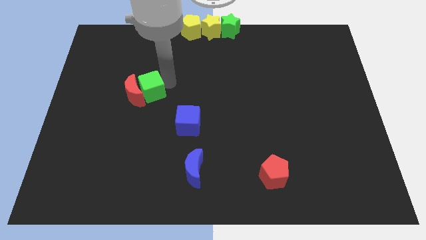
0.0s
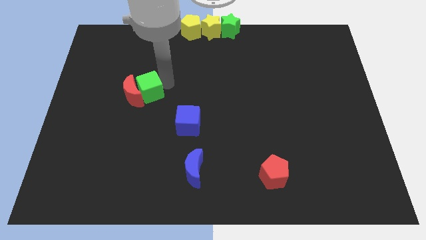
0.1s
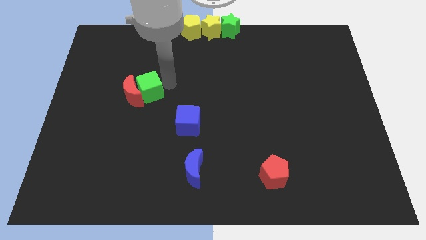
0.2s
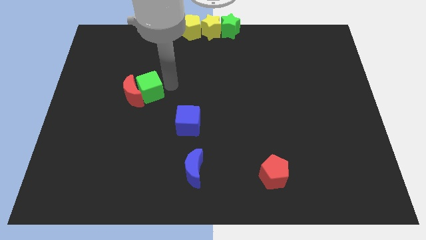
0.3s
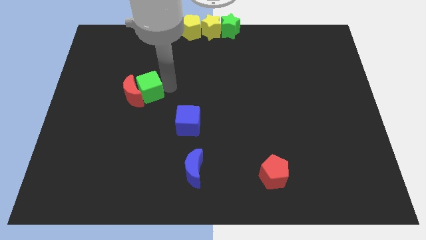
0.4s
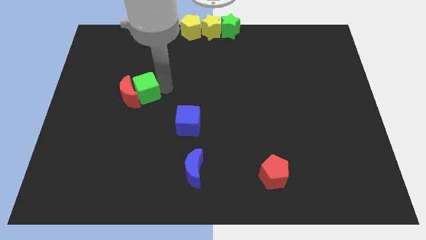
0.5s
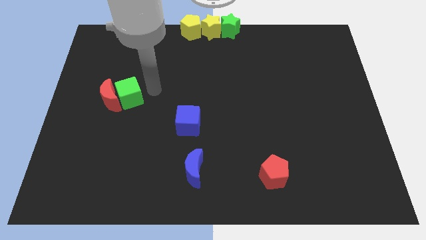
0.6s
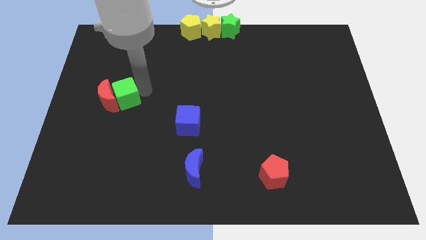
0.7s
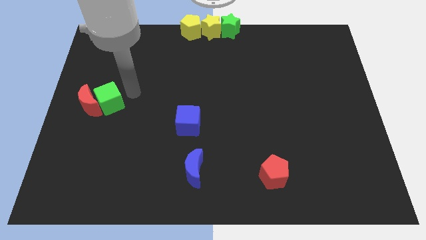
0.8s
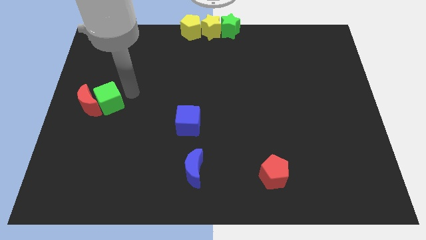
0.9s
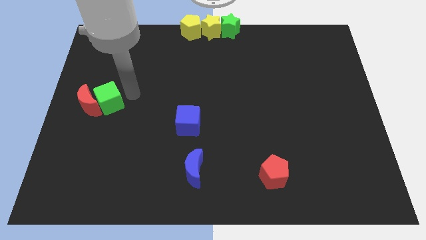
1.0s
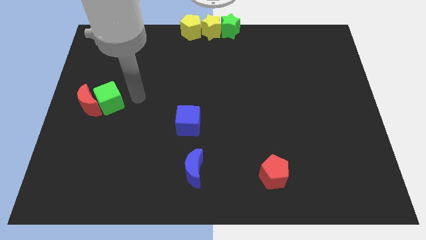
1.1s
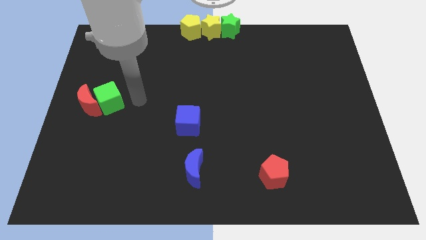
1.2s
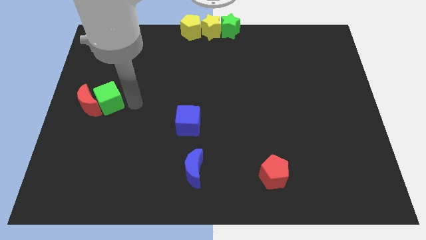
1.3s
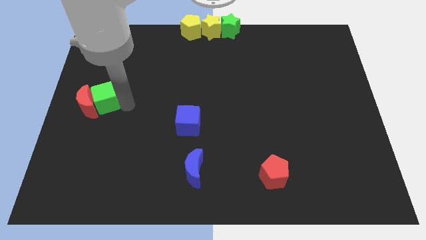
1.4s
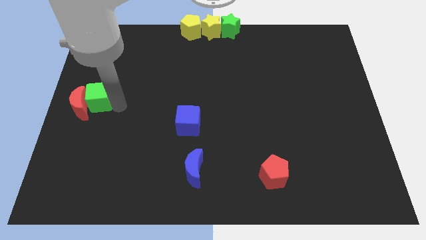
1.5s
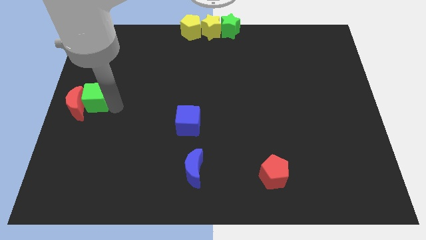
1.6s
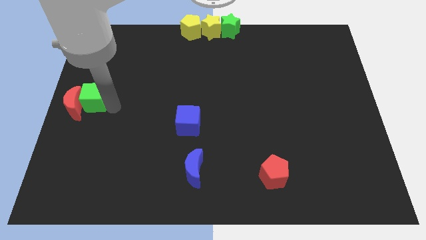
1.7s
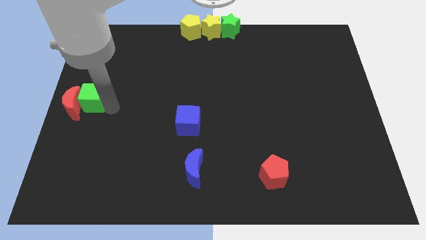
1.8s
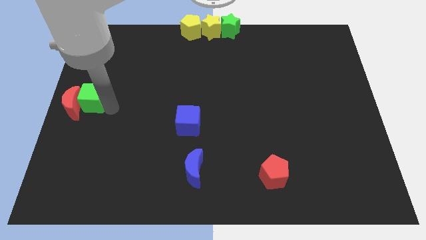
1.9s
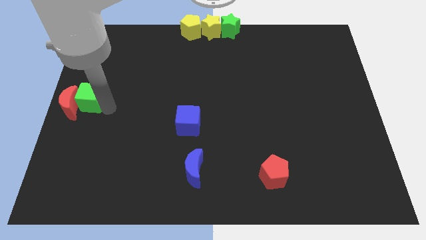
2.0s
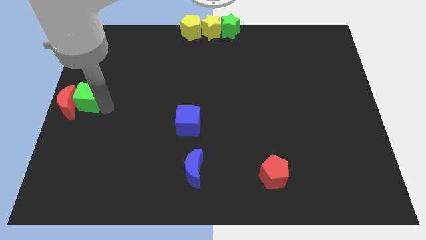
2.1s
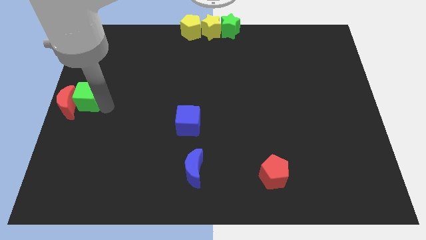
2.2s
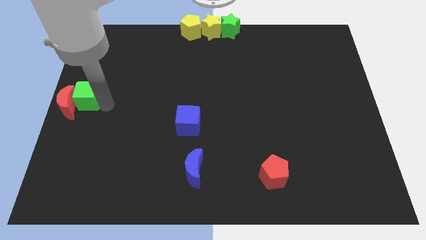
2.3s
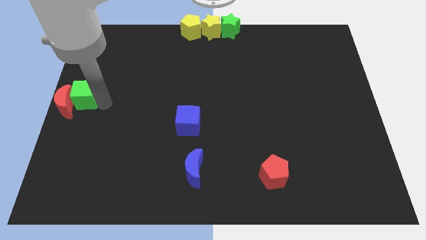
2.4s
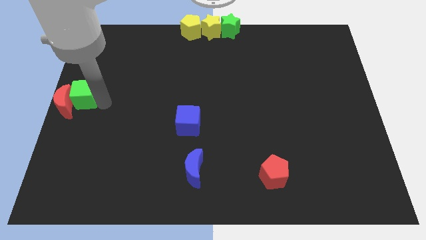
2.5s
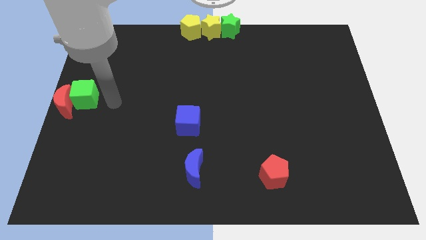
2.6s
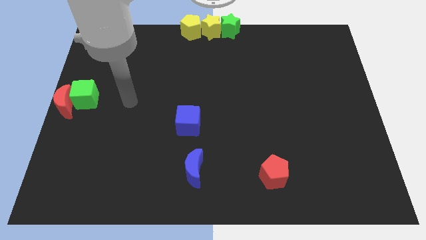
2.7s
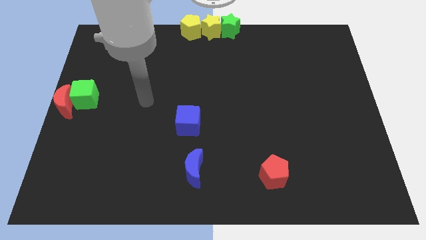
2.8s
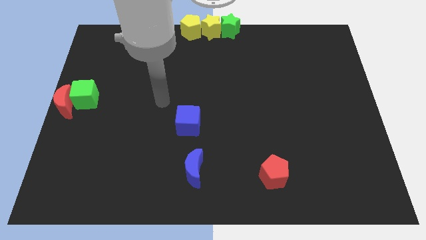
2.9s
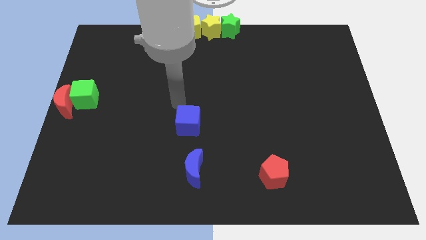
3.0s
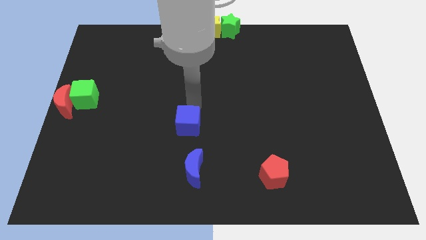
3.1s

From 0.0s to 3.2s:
push the red crescent with the green cube towards the left center of the board

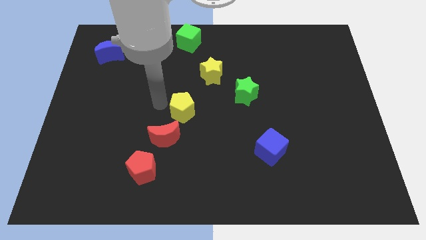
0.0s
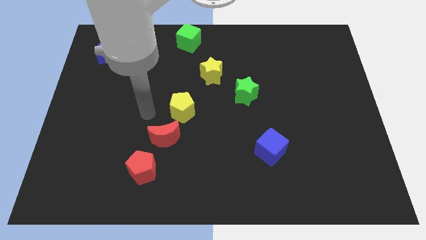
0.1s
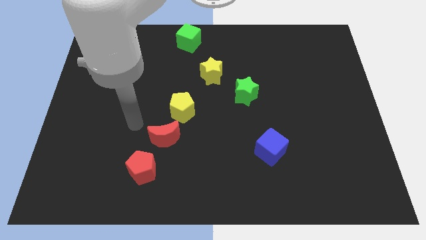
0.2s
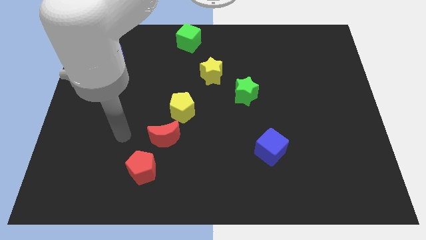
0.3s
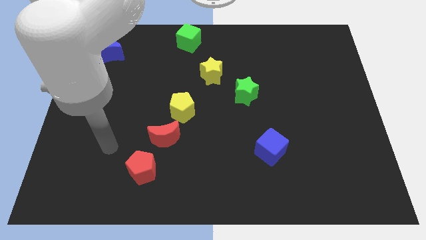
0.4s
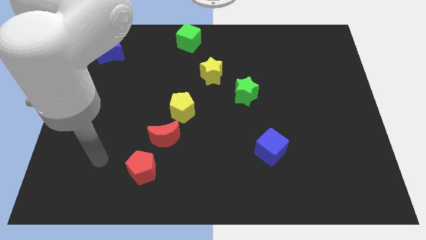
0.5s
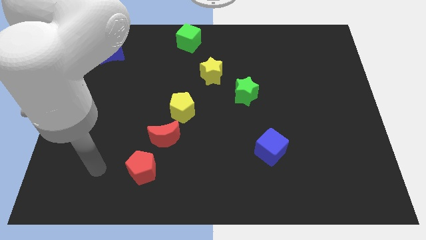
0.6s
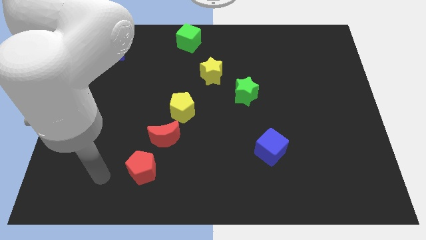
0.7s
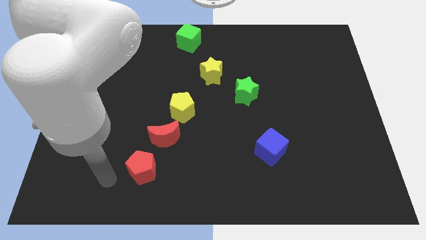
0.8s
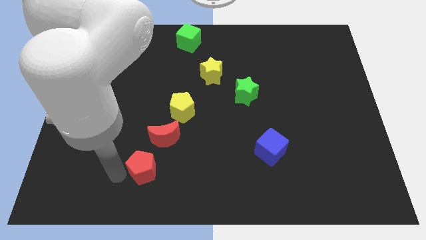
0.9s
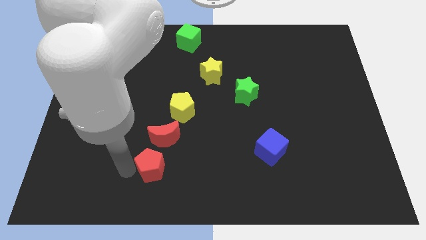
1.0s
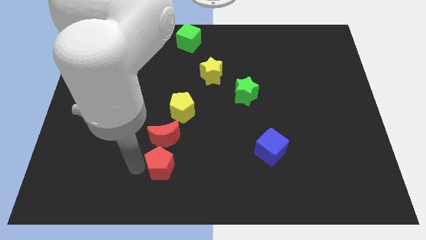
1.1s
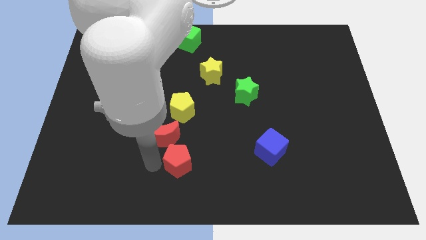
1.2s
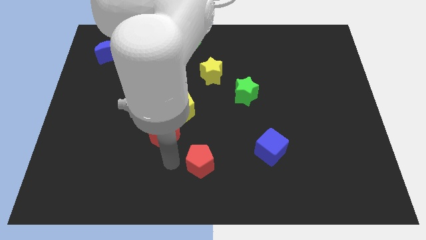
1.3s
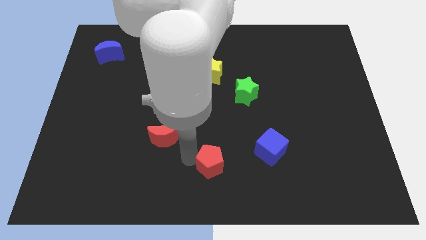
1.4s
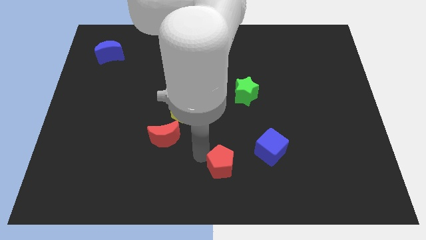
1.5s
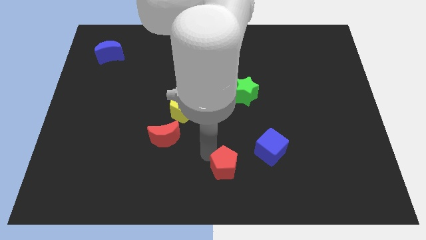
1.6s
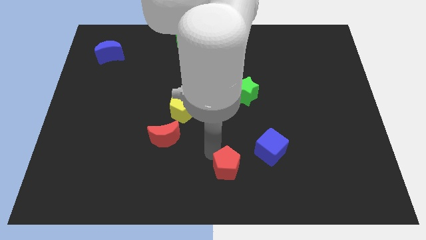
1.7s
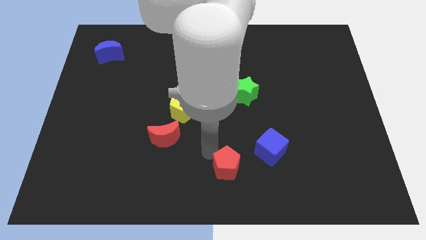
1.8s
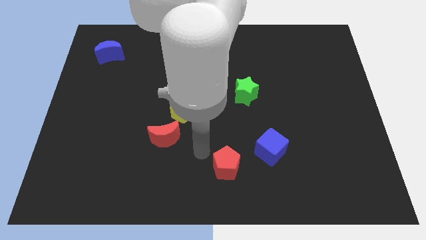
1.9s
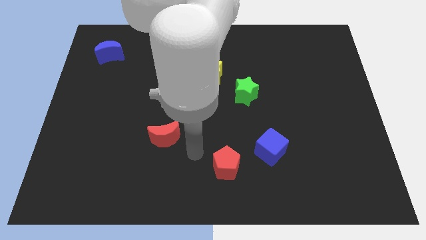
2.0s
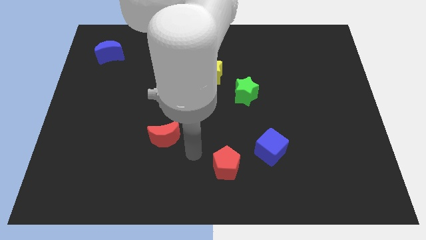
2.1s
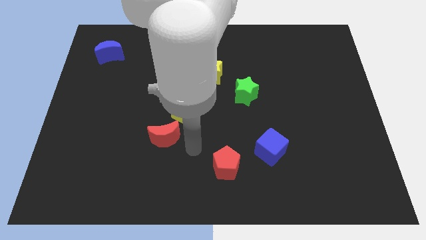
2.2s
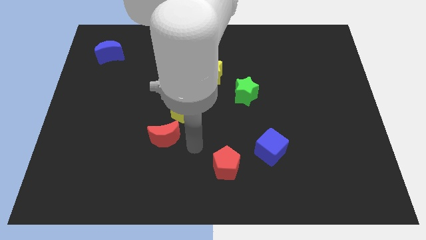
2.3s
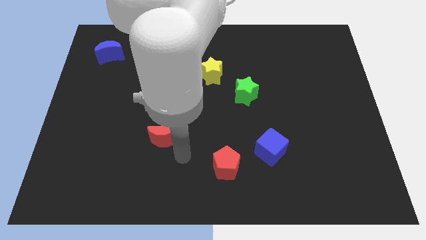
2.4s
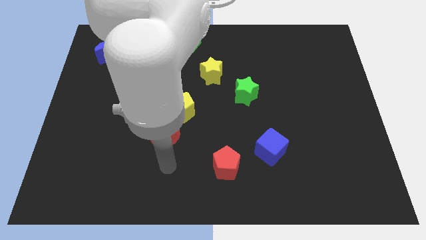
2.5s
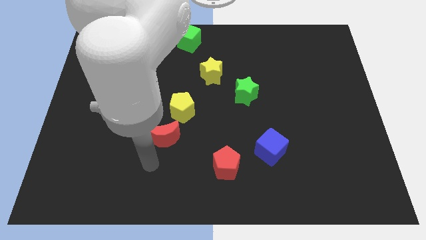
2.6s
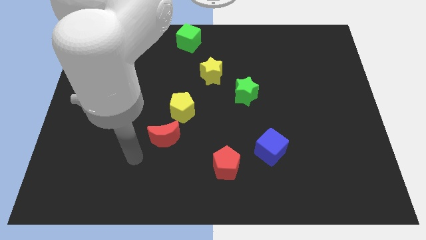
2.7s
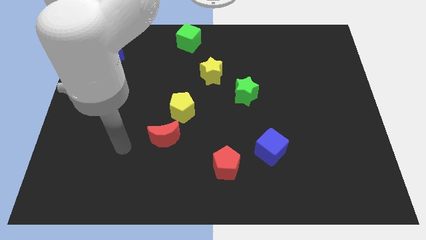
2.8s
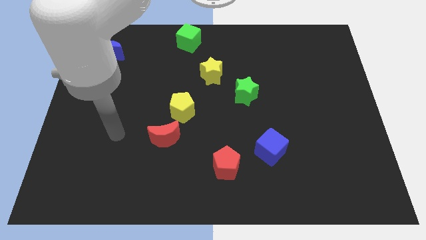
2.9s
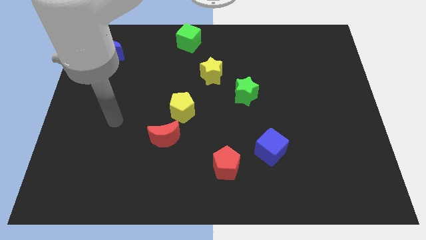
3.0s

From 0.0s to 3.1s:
place the red pentagon diagonal to the yellow pentagon

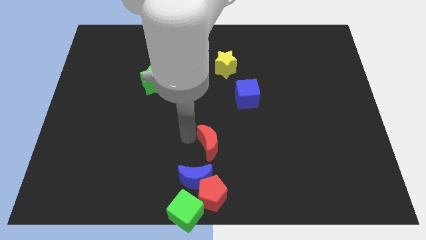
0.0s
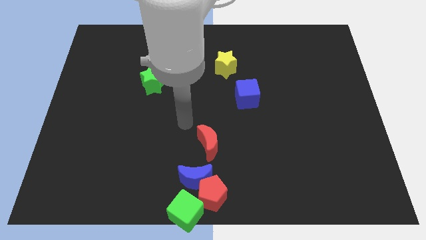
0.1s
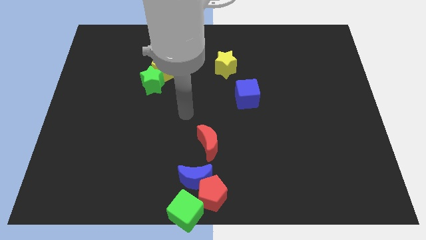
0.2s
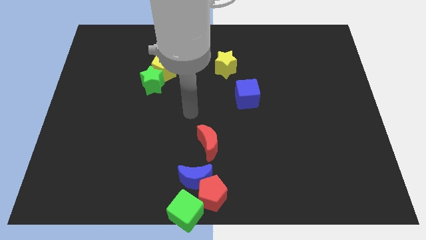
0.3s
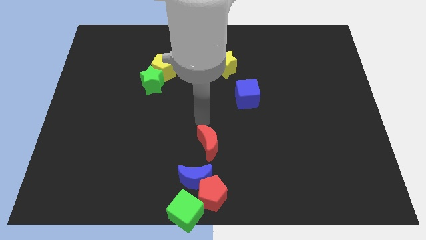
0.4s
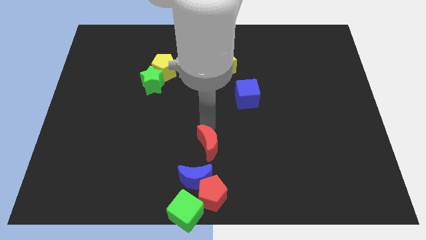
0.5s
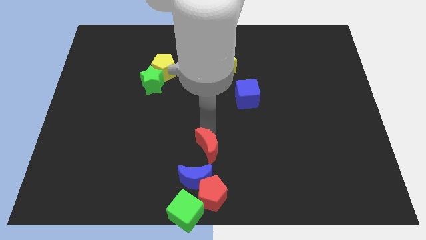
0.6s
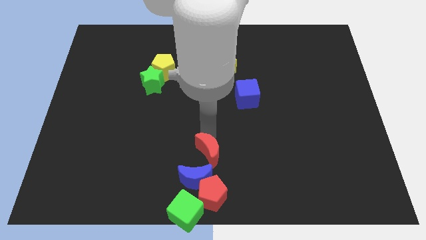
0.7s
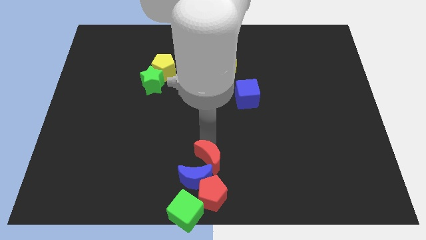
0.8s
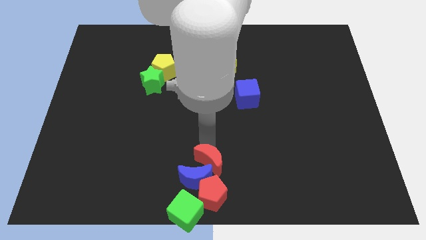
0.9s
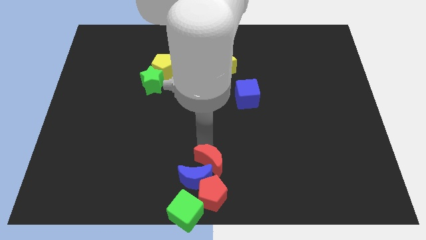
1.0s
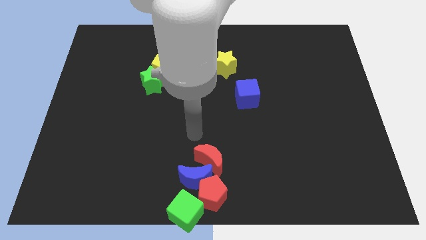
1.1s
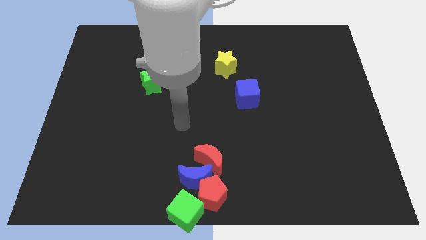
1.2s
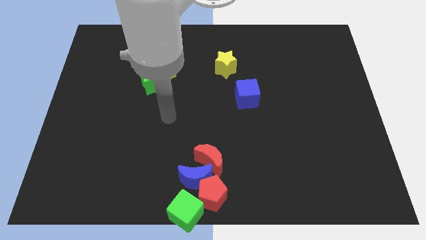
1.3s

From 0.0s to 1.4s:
move the red crescent towards the blue crescent

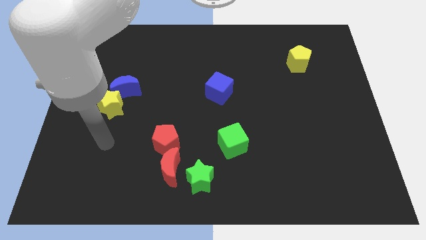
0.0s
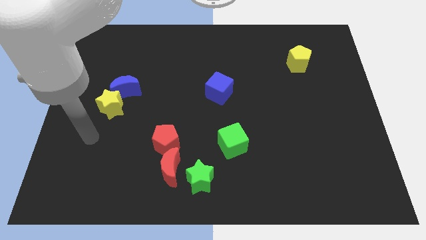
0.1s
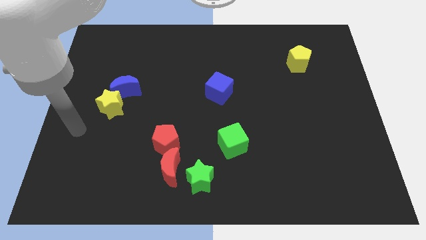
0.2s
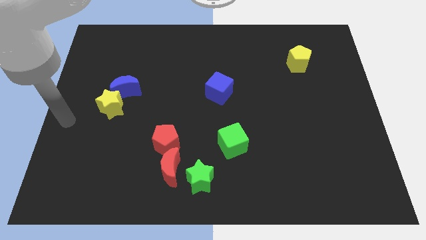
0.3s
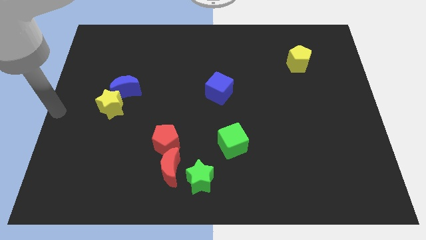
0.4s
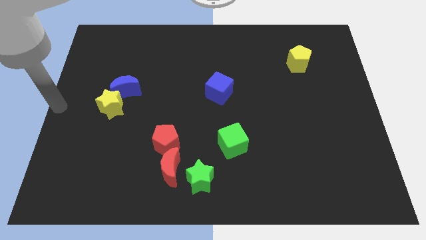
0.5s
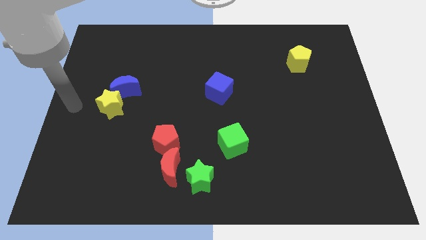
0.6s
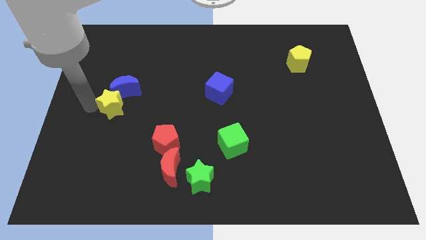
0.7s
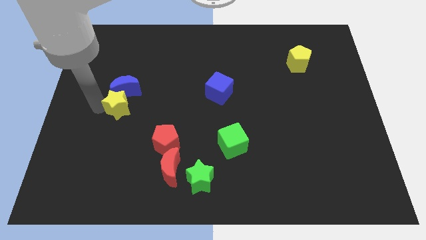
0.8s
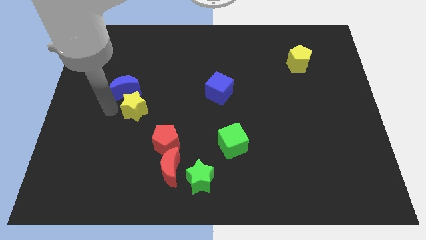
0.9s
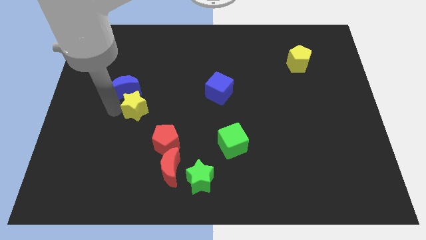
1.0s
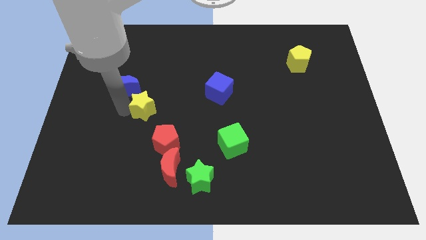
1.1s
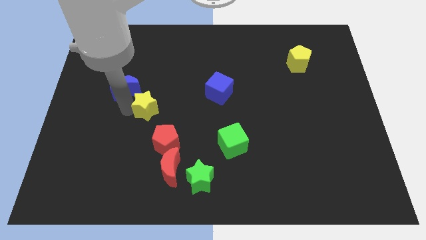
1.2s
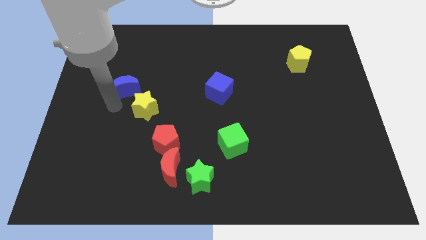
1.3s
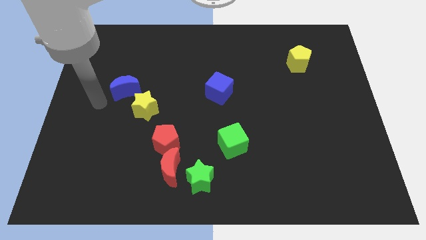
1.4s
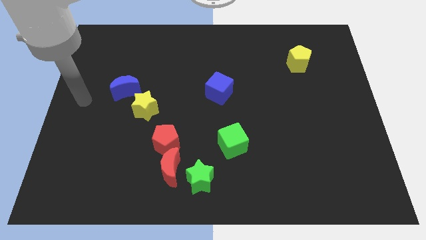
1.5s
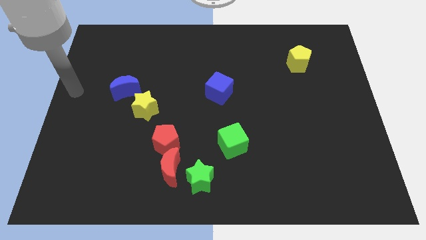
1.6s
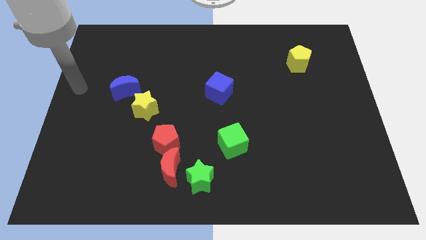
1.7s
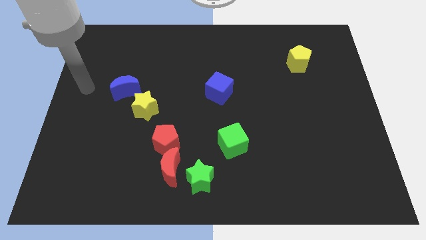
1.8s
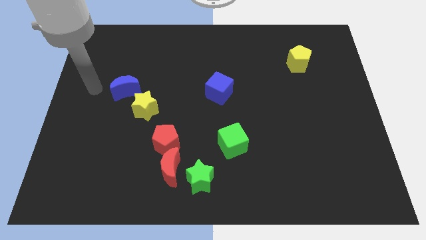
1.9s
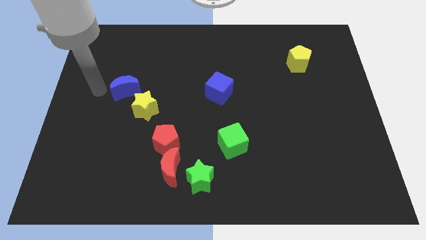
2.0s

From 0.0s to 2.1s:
separate yellow star from blue moon
